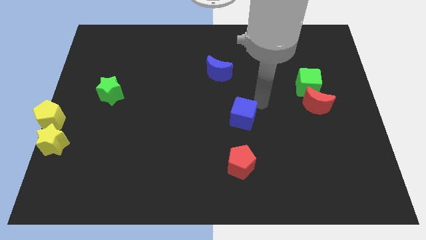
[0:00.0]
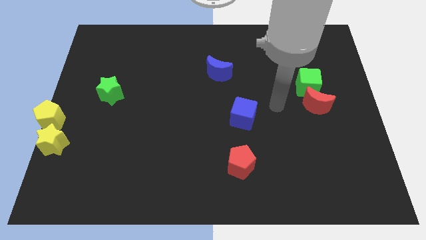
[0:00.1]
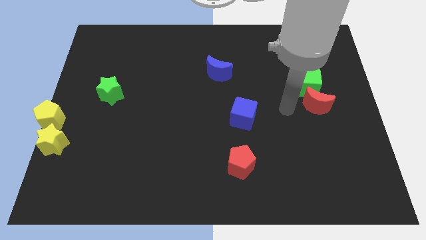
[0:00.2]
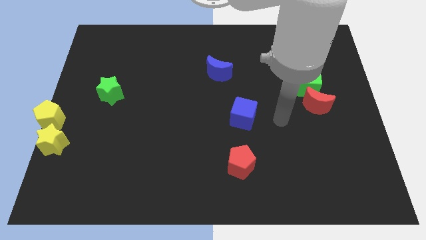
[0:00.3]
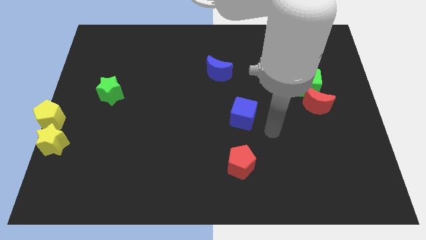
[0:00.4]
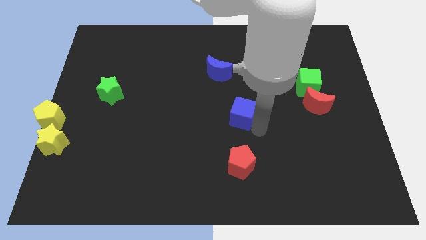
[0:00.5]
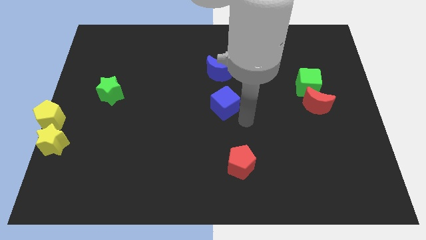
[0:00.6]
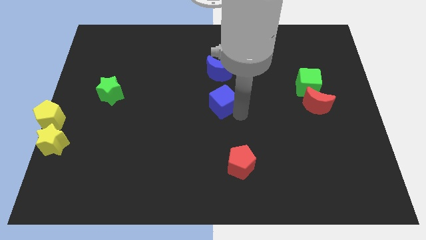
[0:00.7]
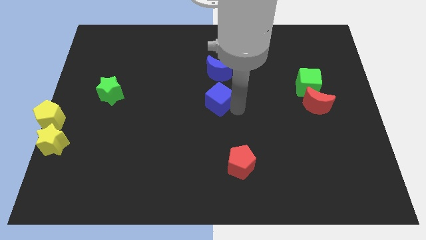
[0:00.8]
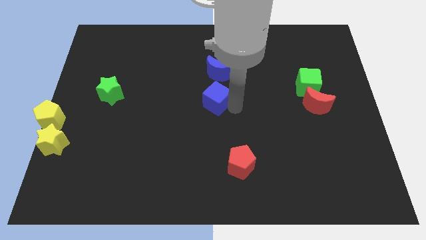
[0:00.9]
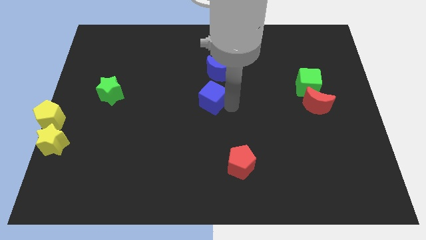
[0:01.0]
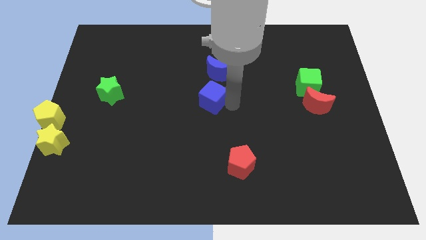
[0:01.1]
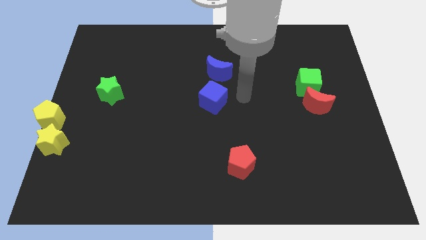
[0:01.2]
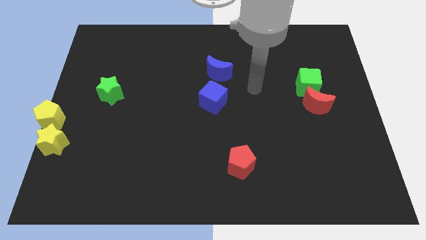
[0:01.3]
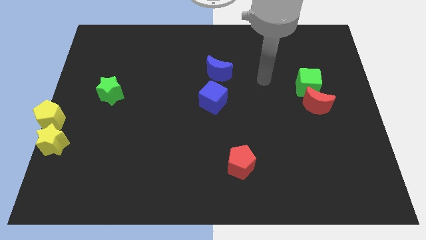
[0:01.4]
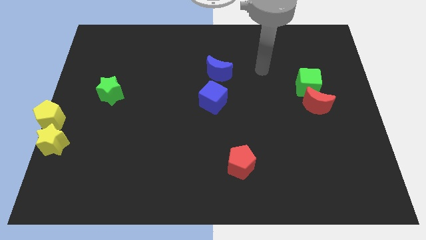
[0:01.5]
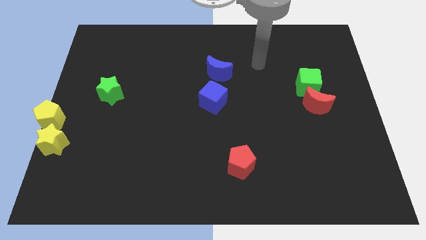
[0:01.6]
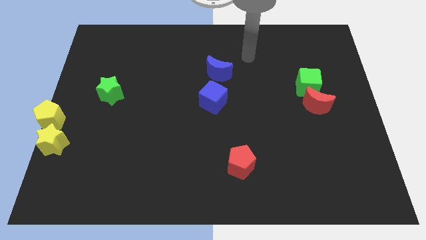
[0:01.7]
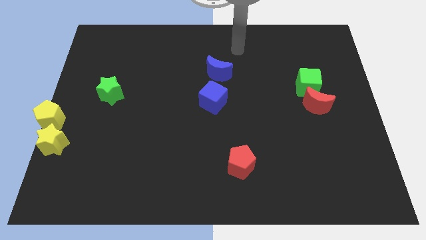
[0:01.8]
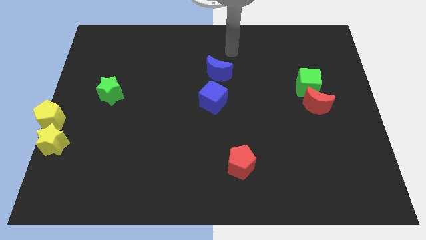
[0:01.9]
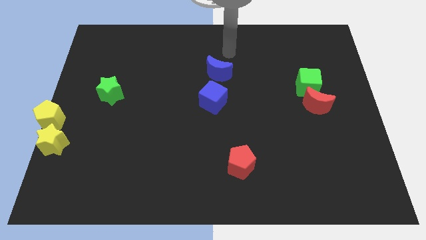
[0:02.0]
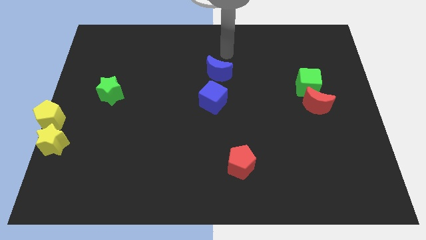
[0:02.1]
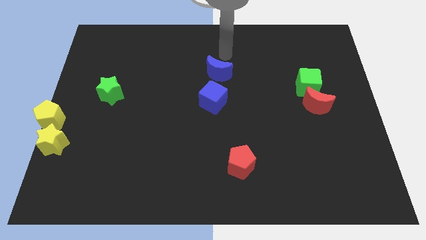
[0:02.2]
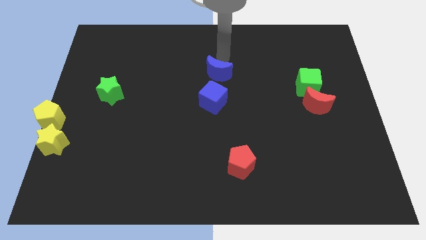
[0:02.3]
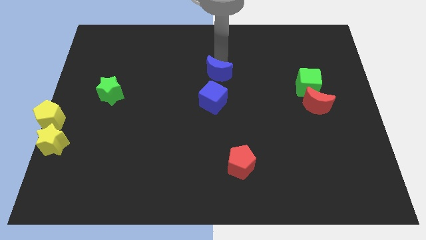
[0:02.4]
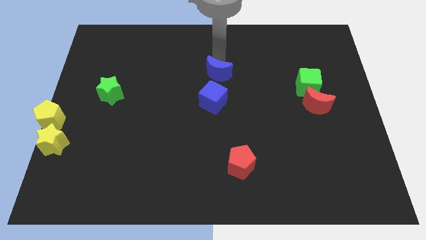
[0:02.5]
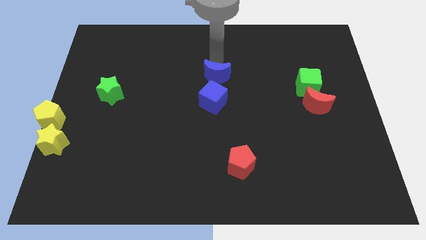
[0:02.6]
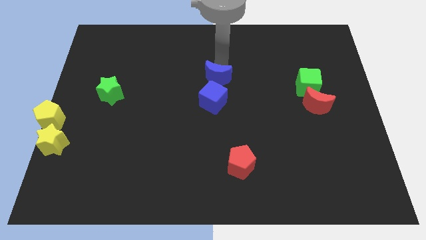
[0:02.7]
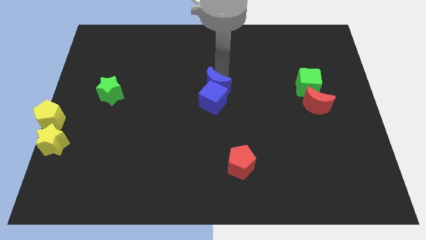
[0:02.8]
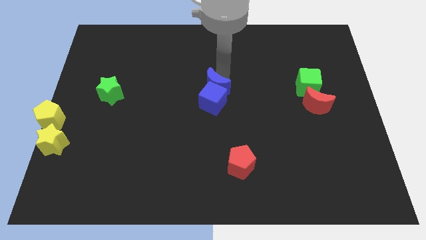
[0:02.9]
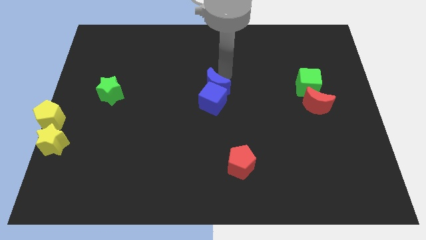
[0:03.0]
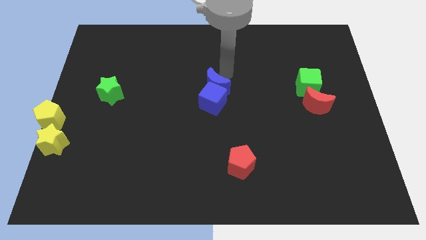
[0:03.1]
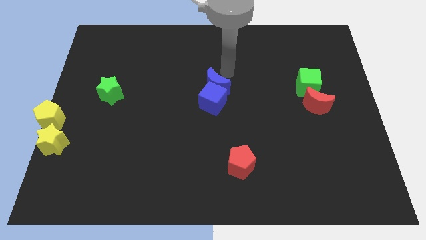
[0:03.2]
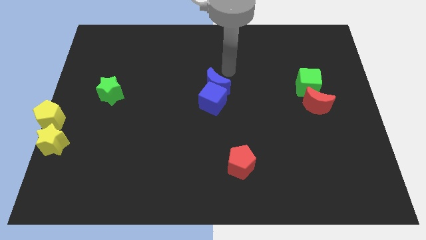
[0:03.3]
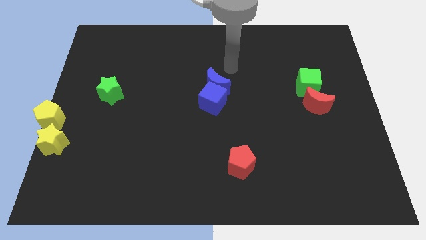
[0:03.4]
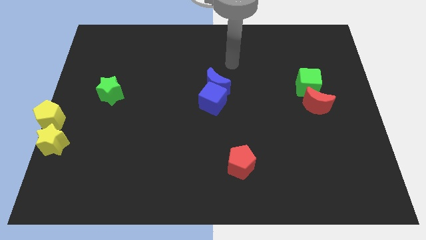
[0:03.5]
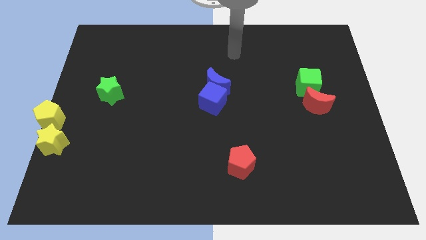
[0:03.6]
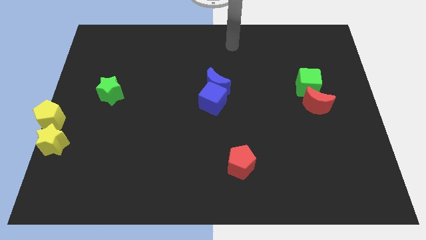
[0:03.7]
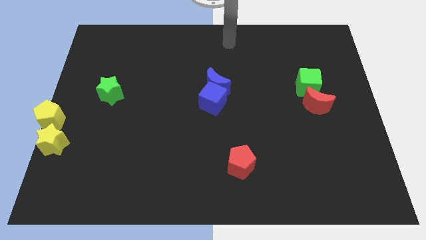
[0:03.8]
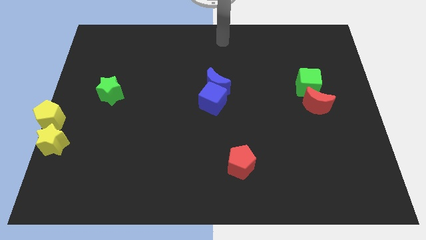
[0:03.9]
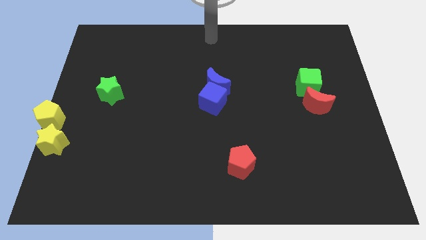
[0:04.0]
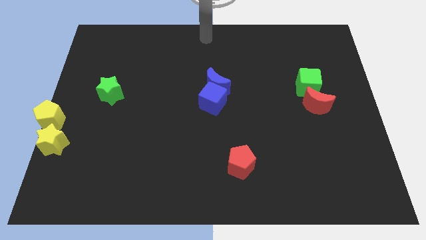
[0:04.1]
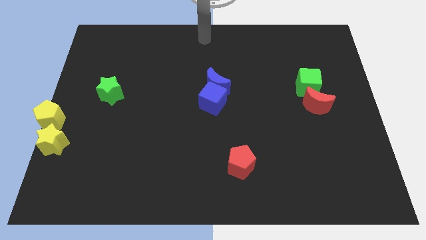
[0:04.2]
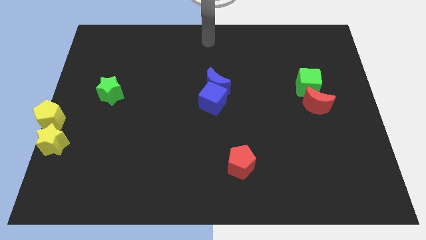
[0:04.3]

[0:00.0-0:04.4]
push the blue crescent into the blue cube

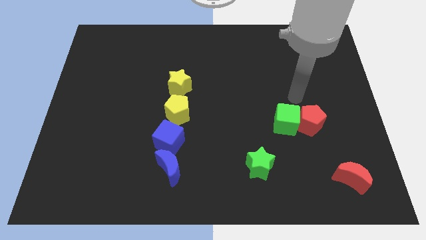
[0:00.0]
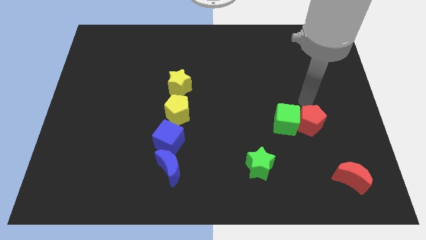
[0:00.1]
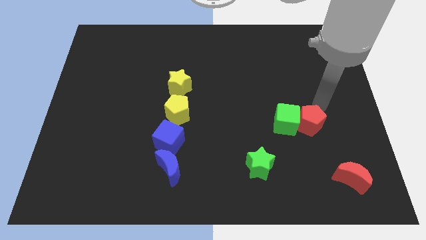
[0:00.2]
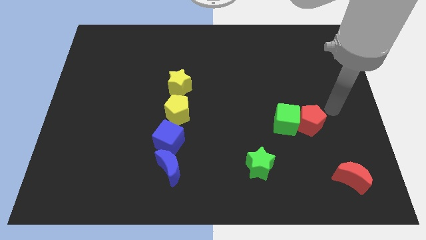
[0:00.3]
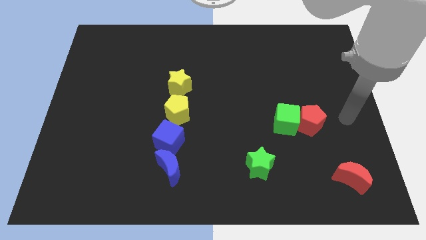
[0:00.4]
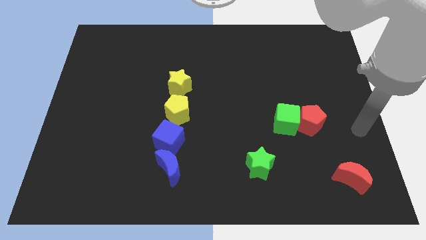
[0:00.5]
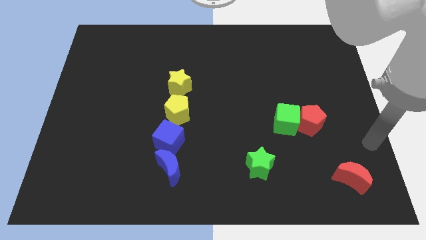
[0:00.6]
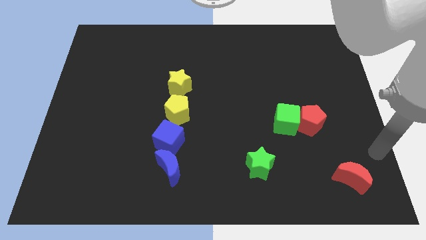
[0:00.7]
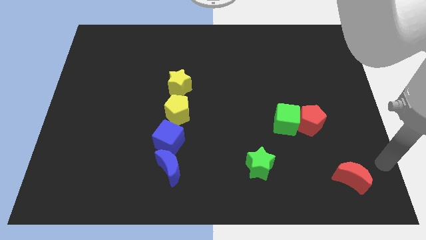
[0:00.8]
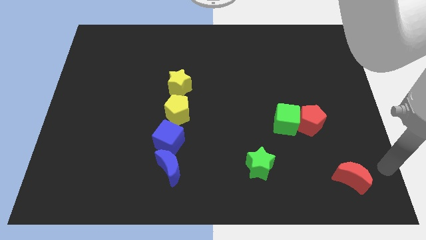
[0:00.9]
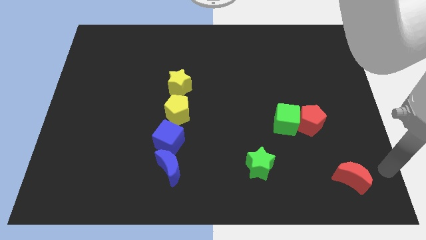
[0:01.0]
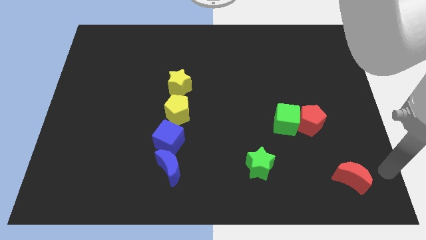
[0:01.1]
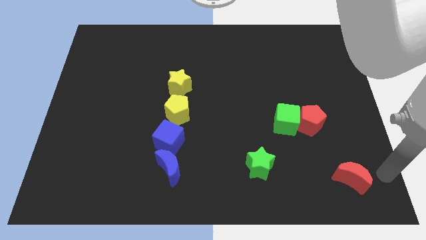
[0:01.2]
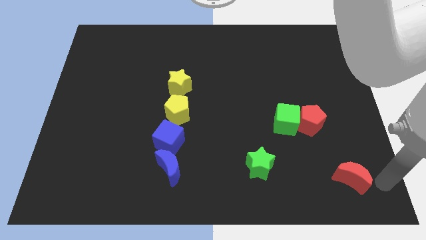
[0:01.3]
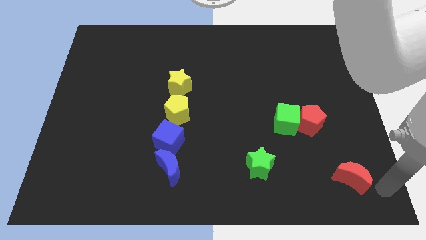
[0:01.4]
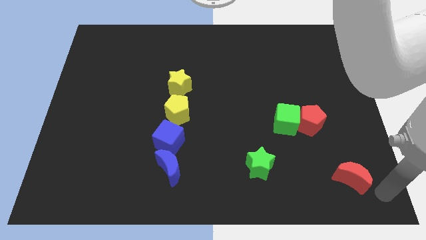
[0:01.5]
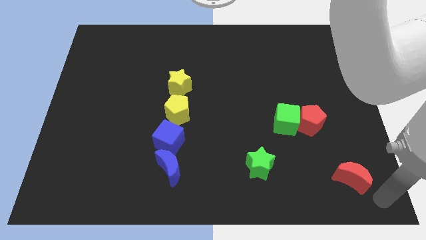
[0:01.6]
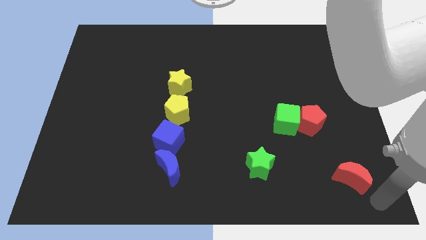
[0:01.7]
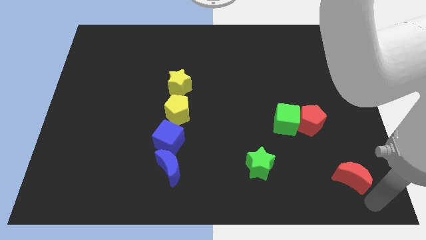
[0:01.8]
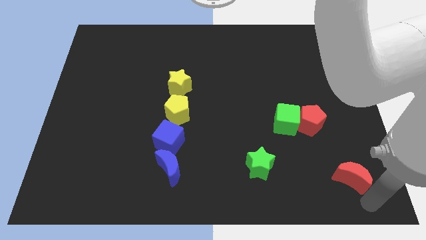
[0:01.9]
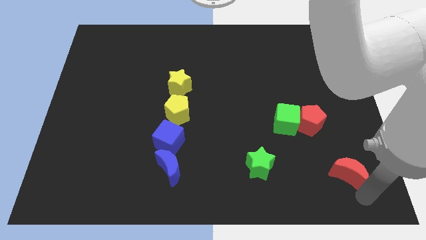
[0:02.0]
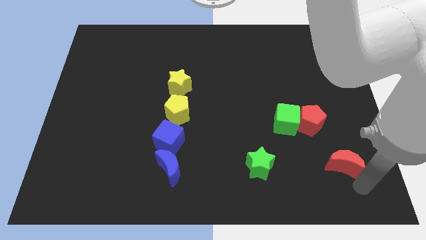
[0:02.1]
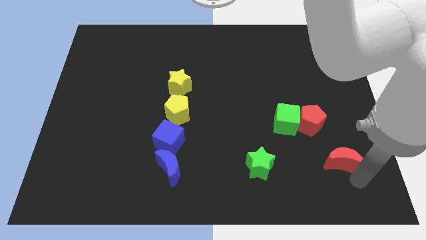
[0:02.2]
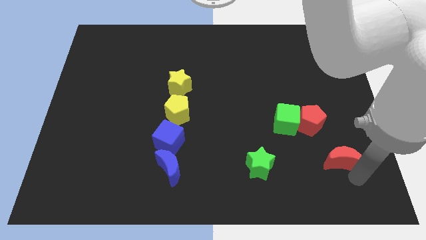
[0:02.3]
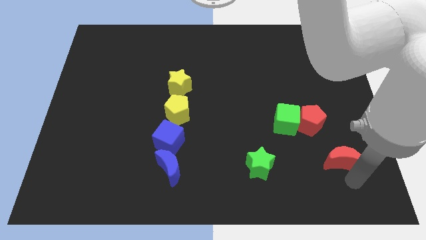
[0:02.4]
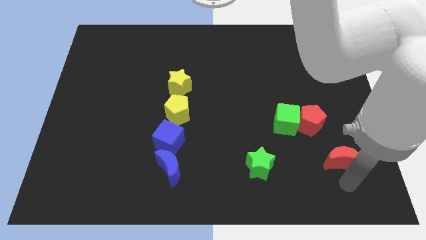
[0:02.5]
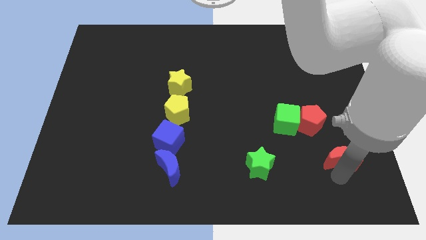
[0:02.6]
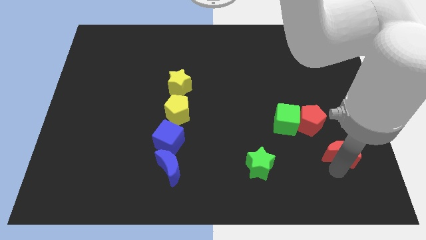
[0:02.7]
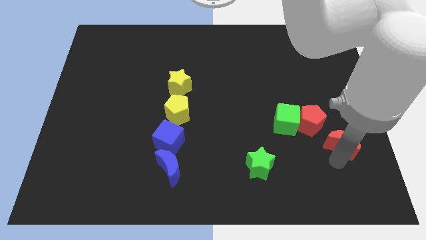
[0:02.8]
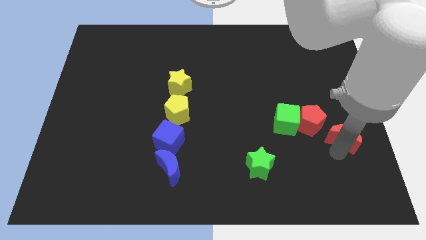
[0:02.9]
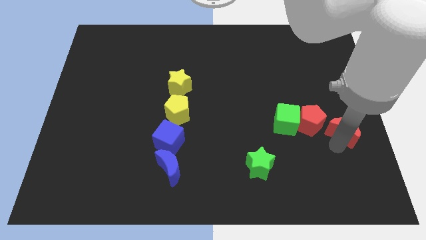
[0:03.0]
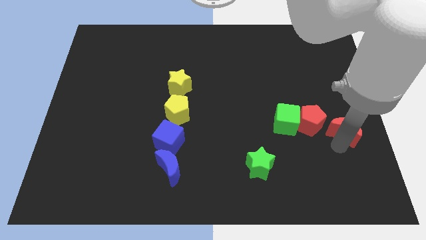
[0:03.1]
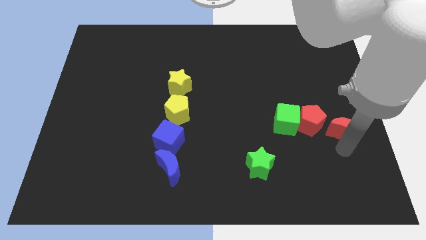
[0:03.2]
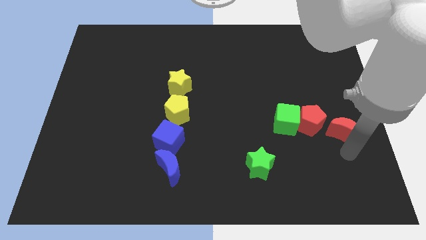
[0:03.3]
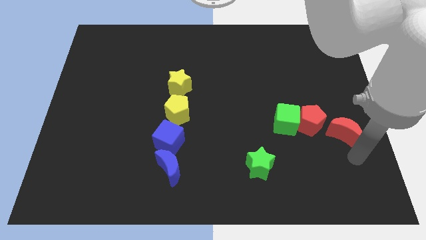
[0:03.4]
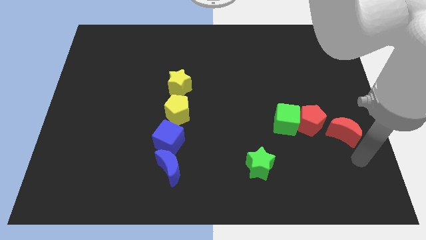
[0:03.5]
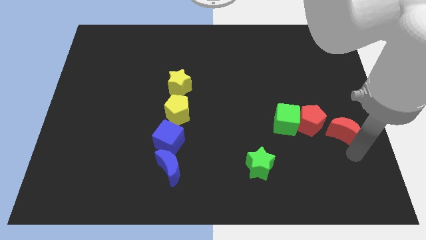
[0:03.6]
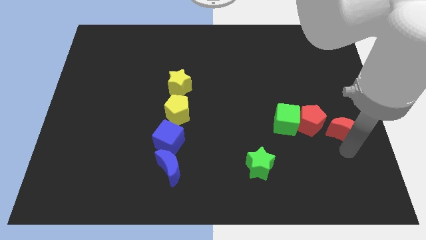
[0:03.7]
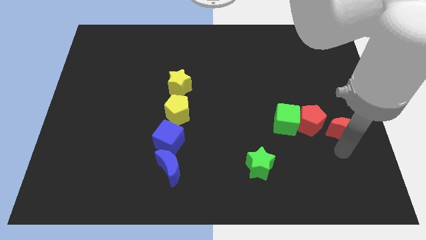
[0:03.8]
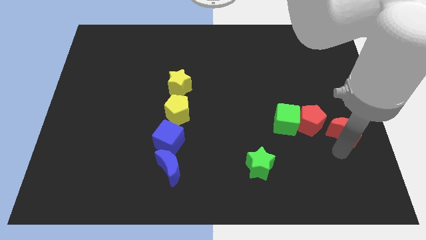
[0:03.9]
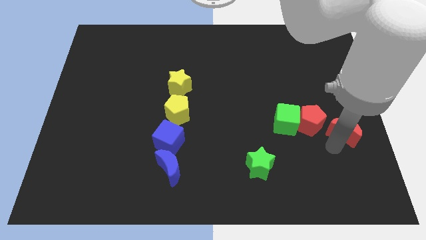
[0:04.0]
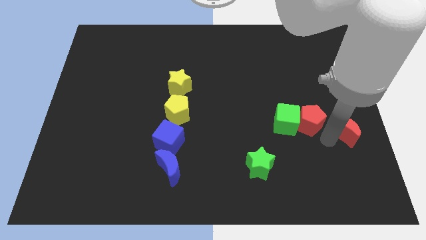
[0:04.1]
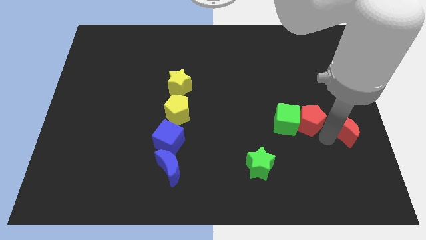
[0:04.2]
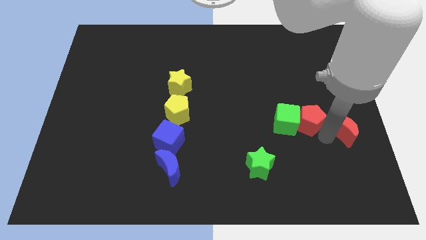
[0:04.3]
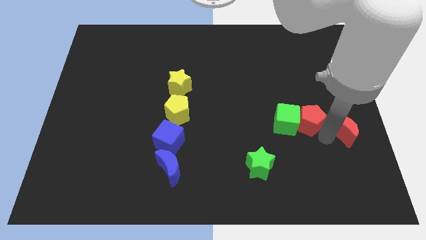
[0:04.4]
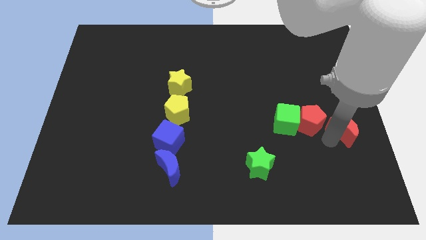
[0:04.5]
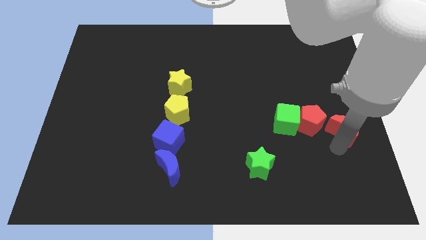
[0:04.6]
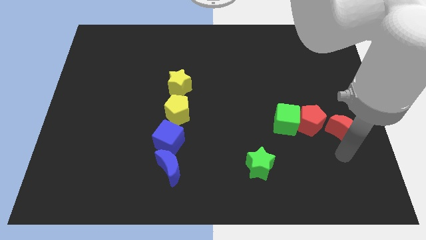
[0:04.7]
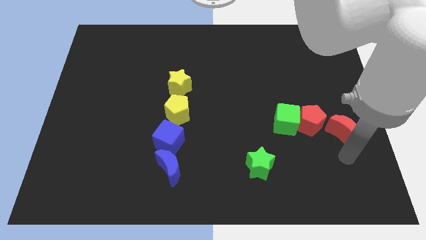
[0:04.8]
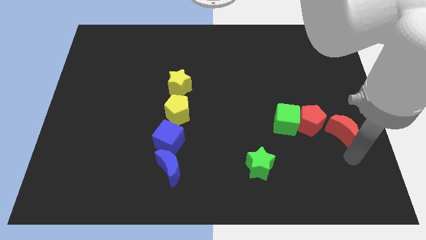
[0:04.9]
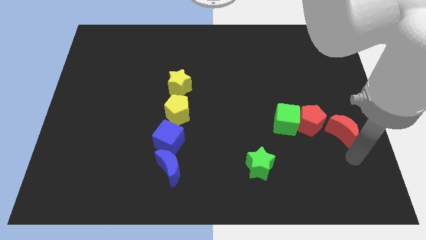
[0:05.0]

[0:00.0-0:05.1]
place the red moon right to the red pentagon
